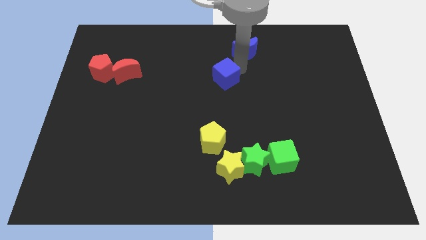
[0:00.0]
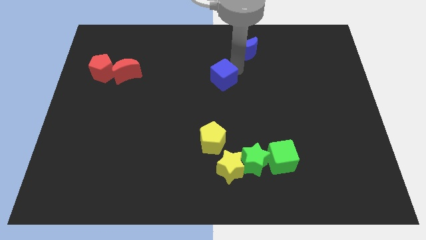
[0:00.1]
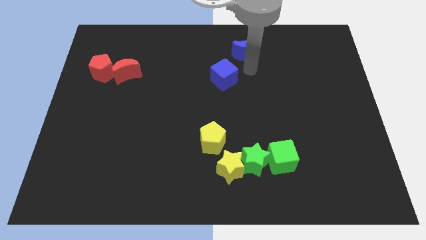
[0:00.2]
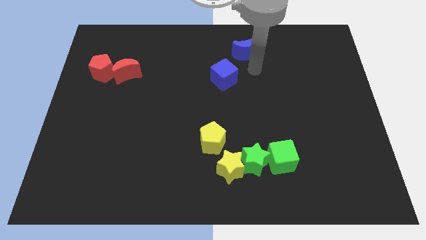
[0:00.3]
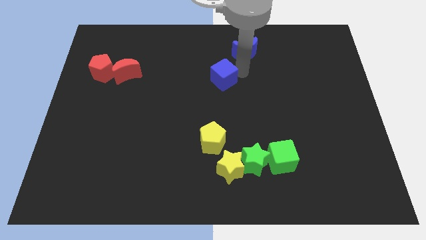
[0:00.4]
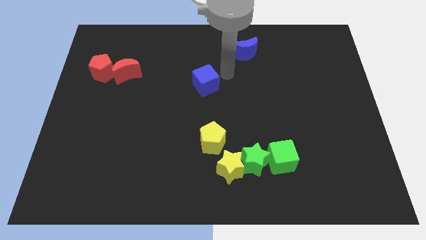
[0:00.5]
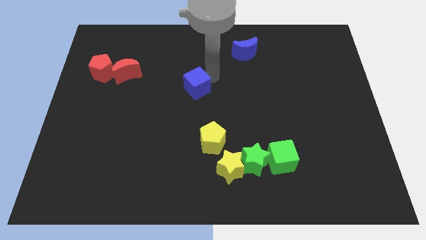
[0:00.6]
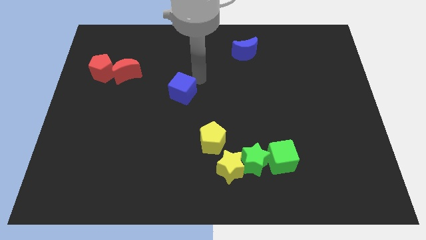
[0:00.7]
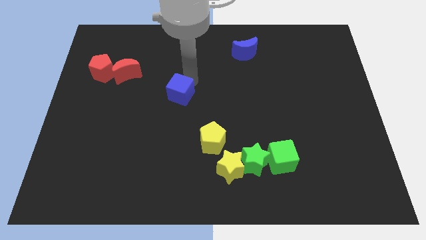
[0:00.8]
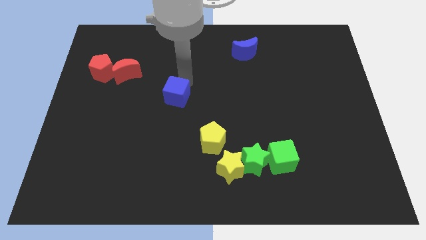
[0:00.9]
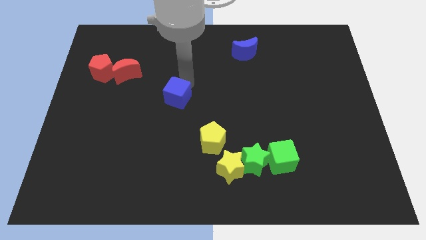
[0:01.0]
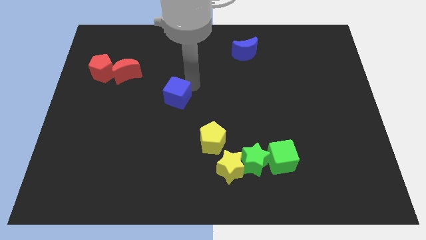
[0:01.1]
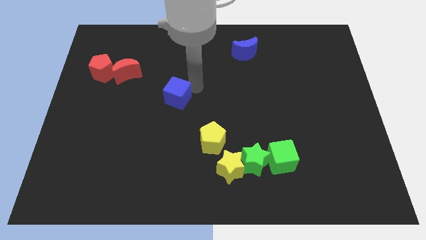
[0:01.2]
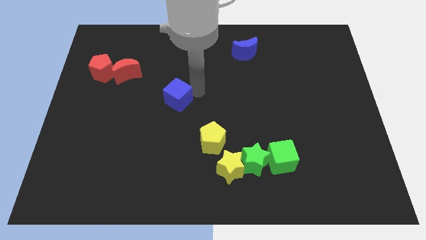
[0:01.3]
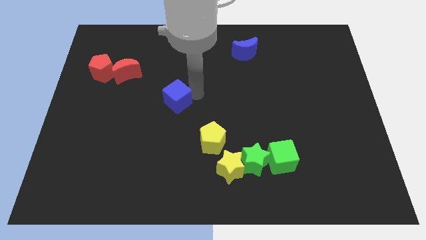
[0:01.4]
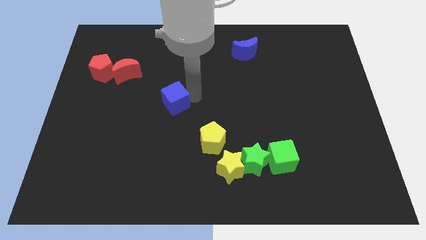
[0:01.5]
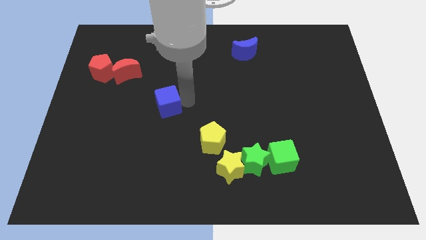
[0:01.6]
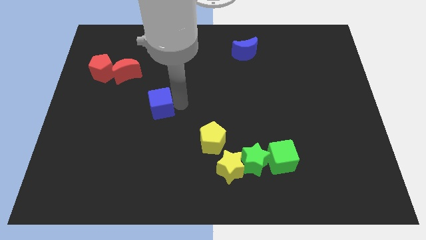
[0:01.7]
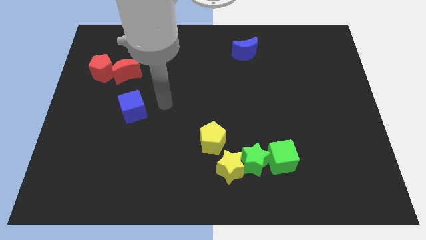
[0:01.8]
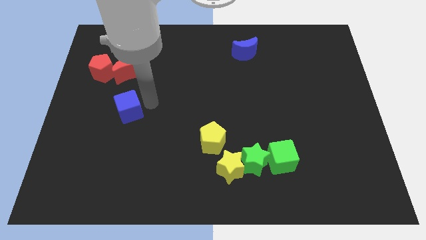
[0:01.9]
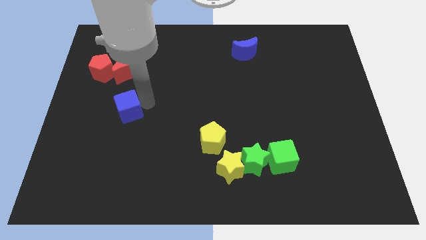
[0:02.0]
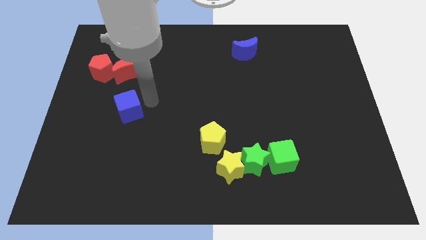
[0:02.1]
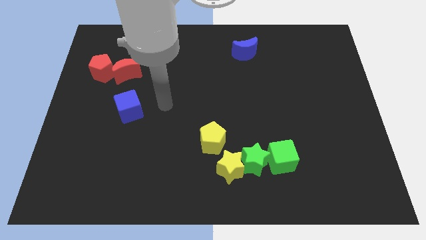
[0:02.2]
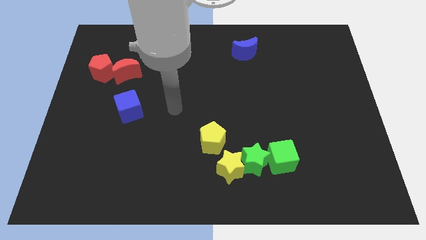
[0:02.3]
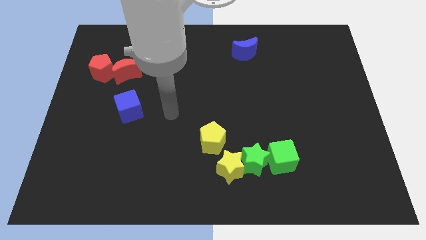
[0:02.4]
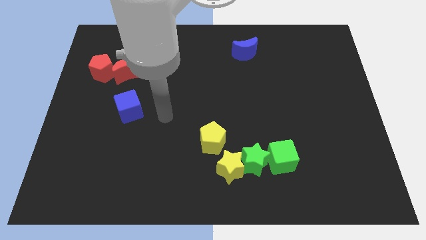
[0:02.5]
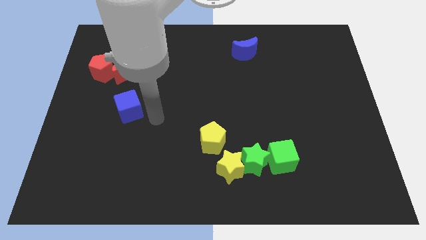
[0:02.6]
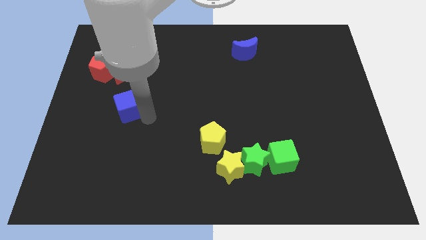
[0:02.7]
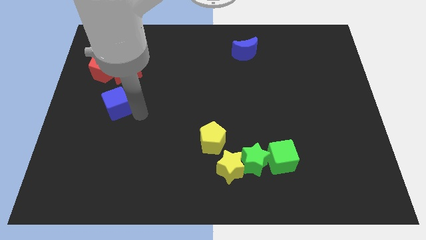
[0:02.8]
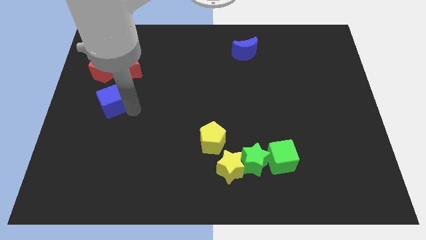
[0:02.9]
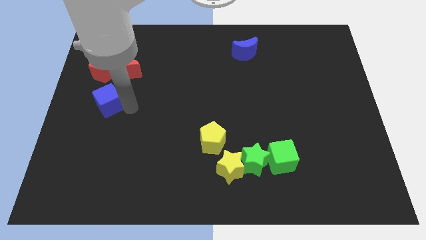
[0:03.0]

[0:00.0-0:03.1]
move the blue cube towards the bottom side of the red blocks

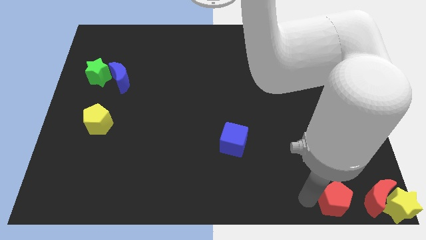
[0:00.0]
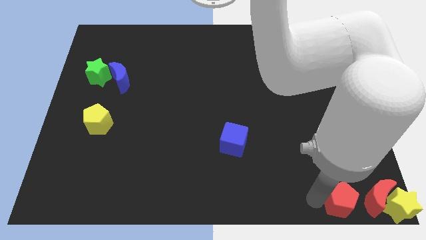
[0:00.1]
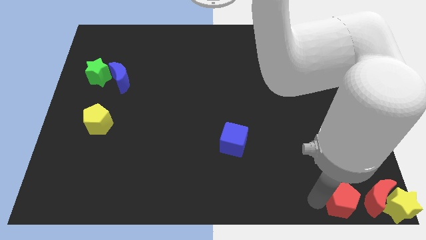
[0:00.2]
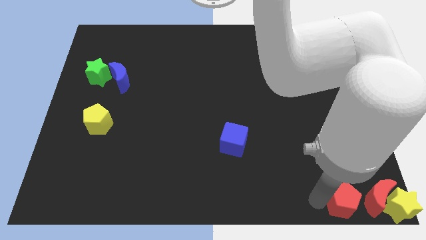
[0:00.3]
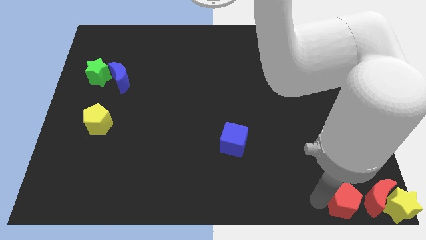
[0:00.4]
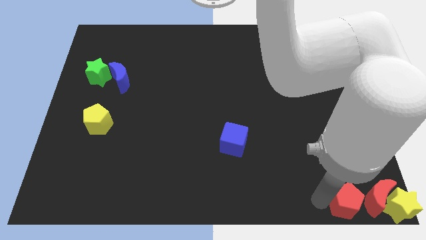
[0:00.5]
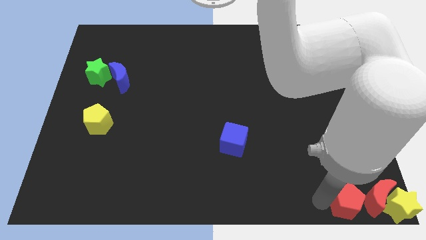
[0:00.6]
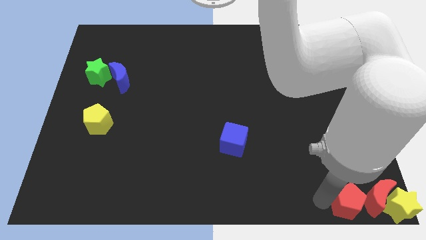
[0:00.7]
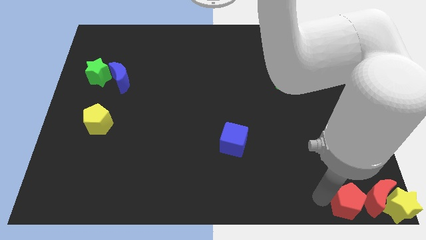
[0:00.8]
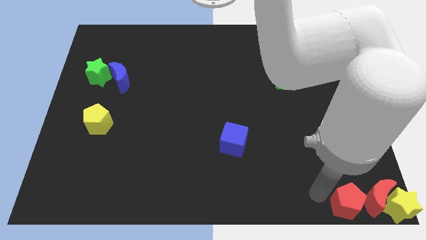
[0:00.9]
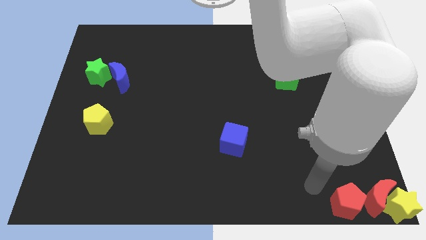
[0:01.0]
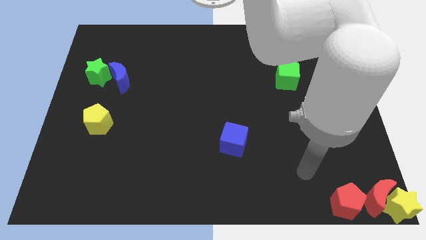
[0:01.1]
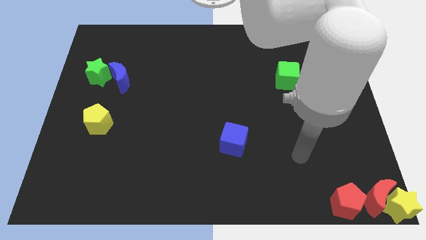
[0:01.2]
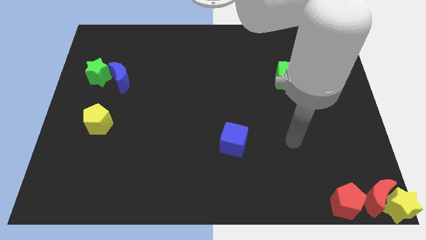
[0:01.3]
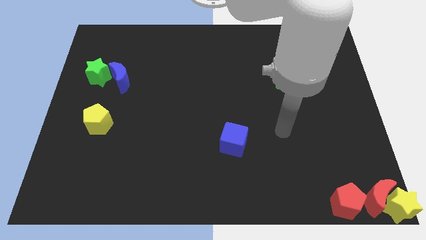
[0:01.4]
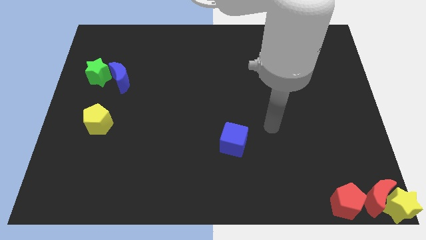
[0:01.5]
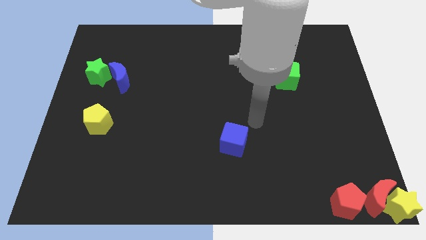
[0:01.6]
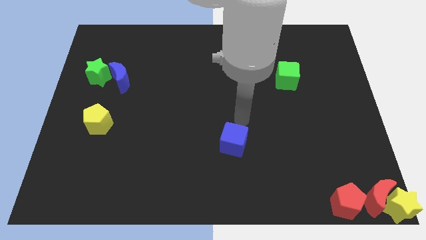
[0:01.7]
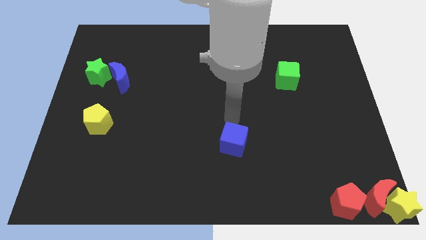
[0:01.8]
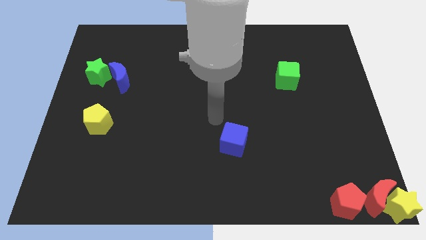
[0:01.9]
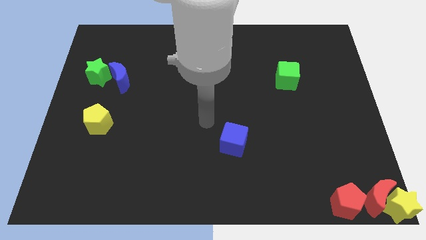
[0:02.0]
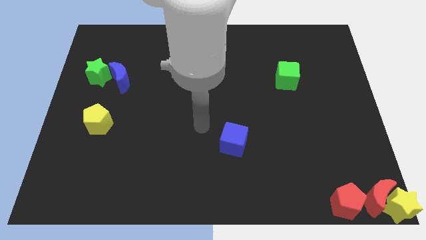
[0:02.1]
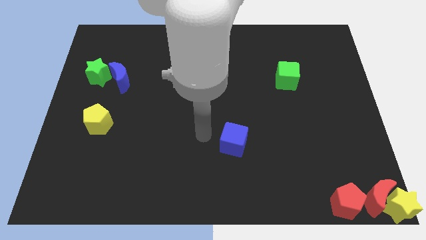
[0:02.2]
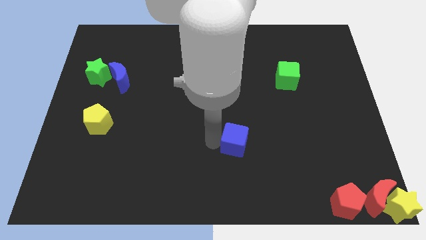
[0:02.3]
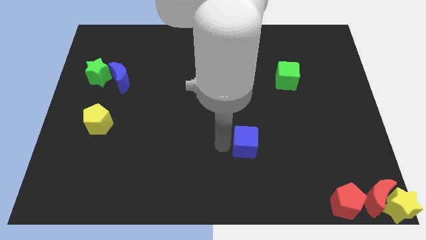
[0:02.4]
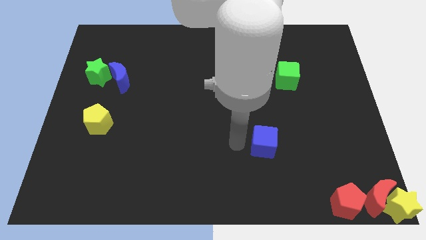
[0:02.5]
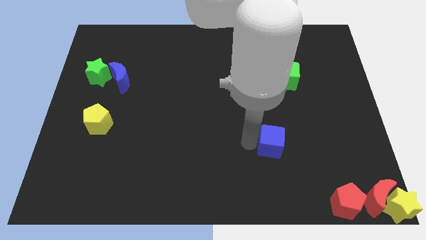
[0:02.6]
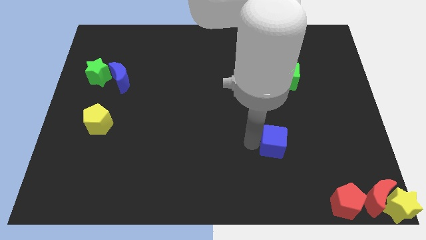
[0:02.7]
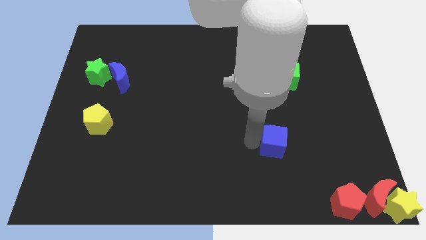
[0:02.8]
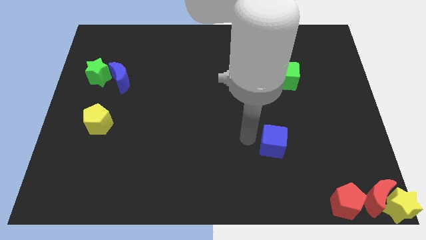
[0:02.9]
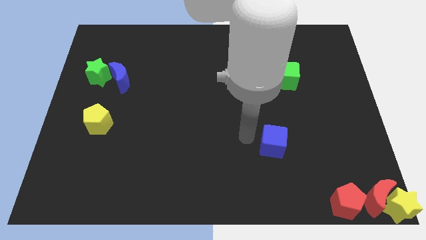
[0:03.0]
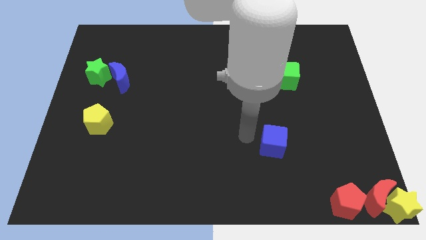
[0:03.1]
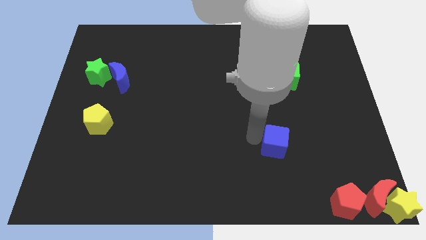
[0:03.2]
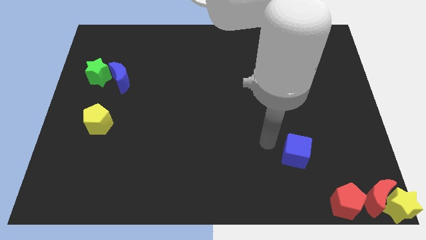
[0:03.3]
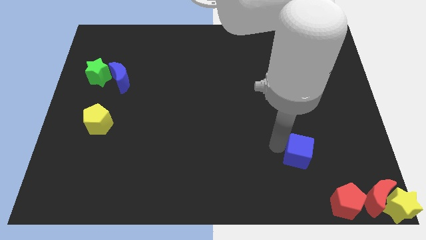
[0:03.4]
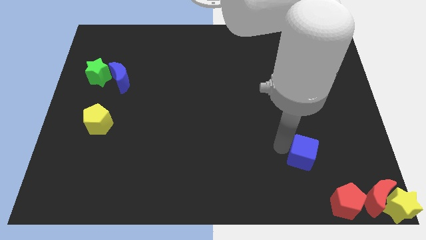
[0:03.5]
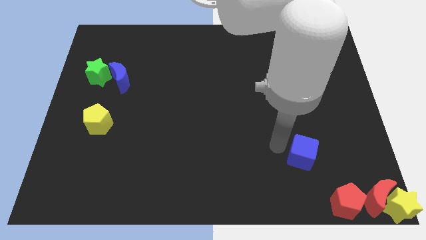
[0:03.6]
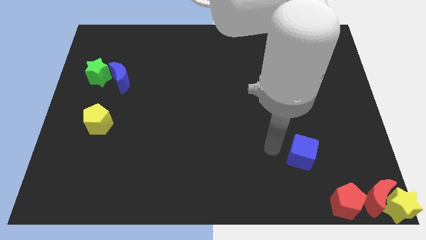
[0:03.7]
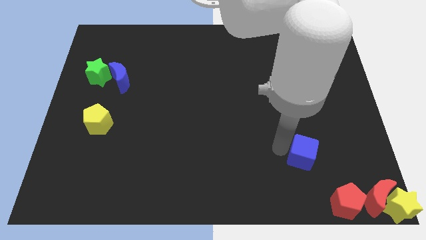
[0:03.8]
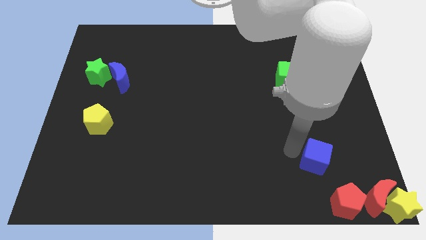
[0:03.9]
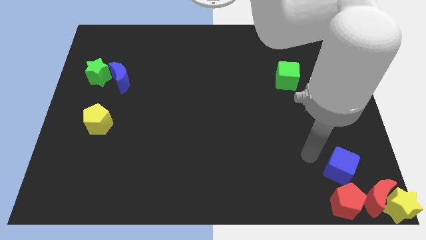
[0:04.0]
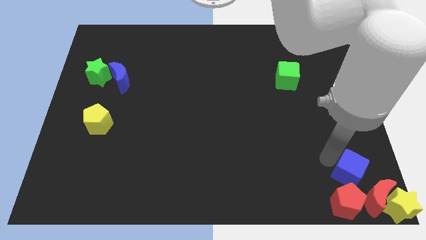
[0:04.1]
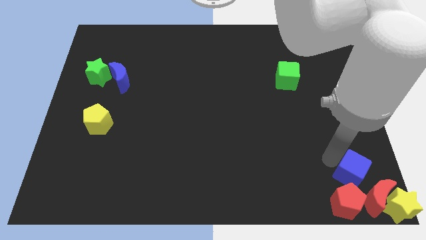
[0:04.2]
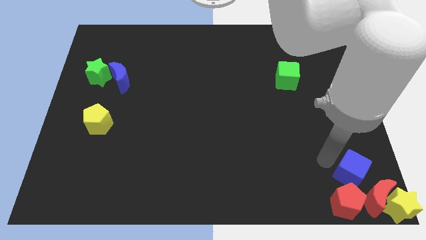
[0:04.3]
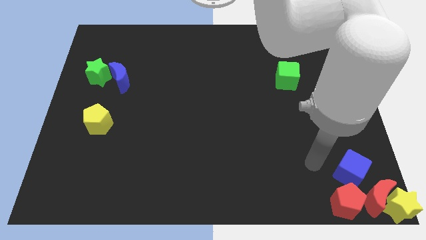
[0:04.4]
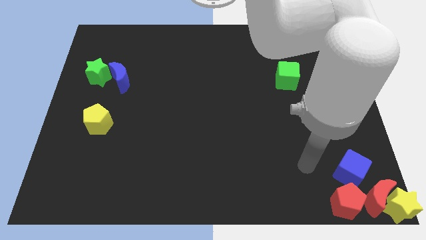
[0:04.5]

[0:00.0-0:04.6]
place the blue cube above the red pentagon

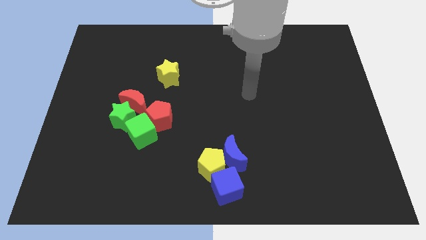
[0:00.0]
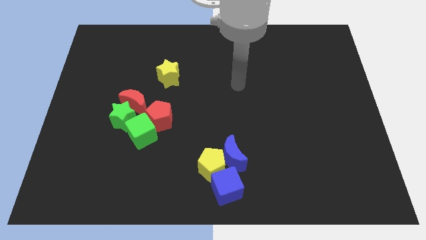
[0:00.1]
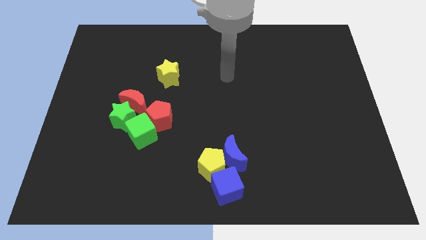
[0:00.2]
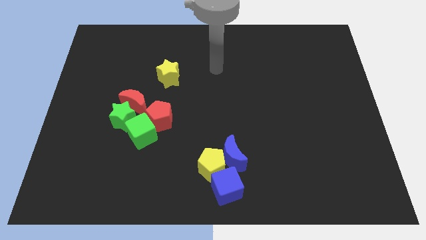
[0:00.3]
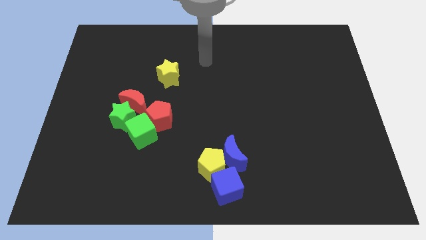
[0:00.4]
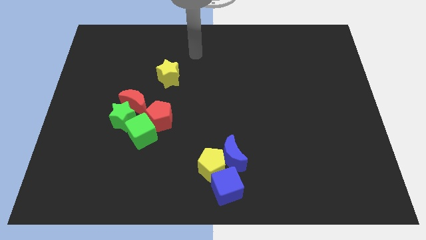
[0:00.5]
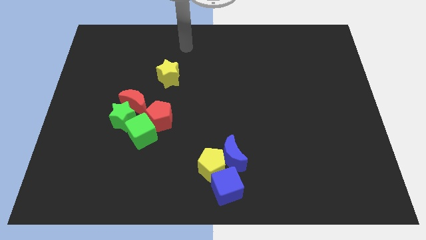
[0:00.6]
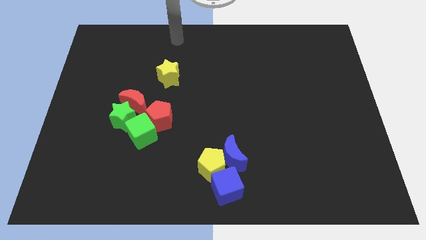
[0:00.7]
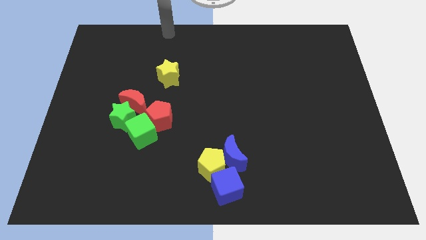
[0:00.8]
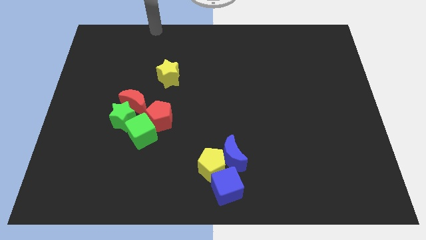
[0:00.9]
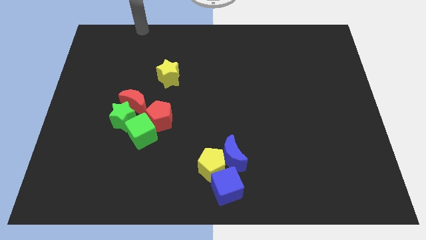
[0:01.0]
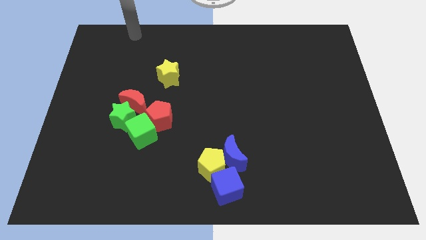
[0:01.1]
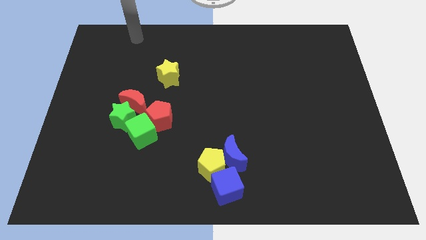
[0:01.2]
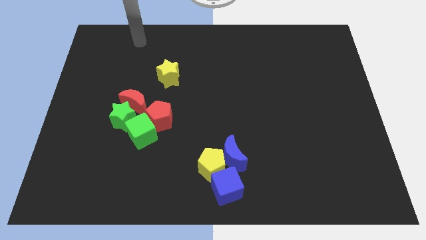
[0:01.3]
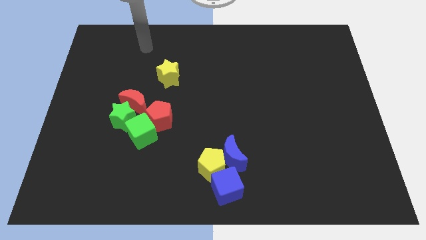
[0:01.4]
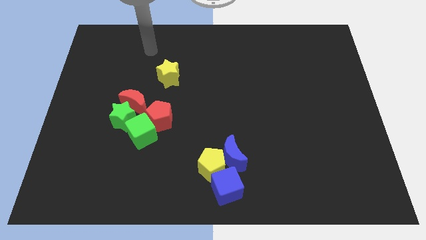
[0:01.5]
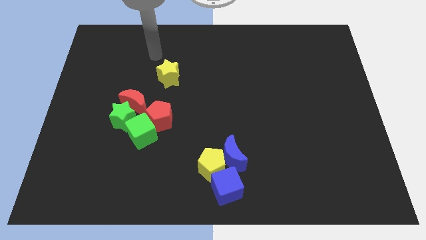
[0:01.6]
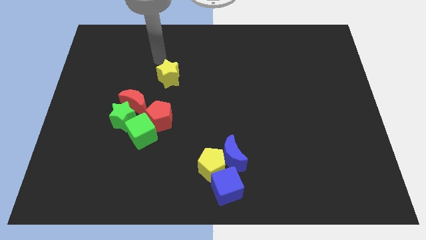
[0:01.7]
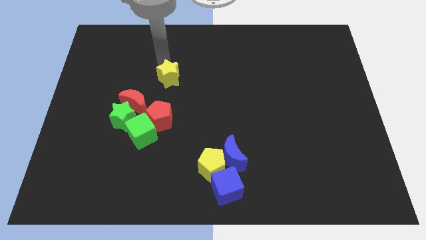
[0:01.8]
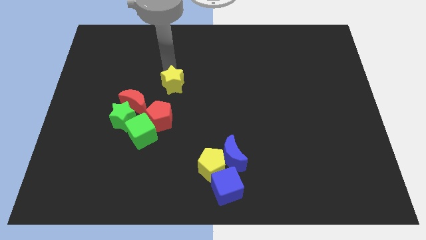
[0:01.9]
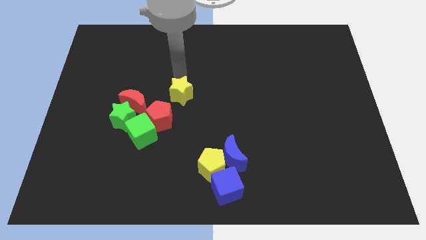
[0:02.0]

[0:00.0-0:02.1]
push the yellow star towards the red pentagon
